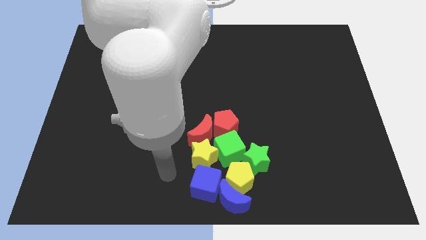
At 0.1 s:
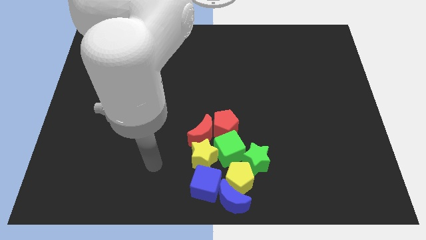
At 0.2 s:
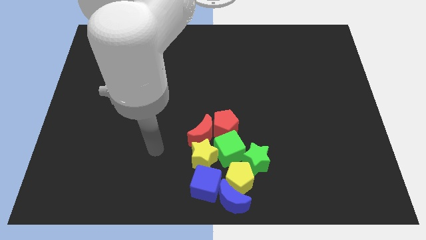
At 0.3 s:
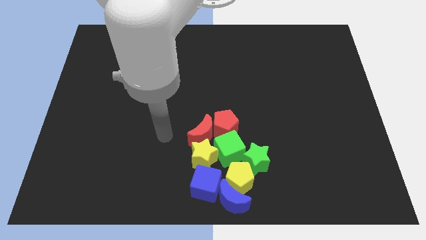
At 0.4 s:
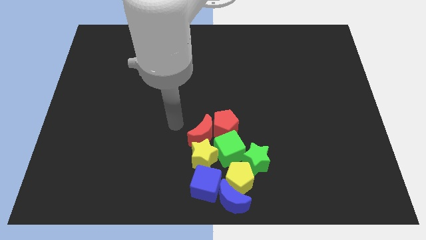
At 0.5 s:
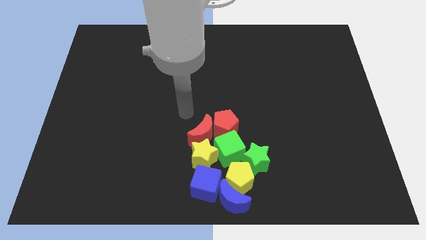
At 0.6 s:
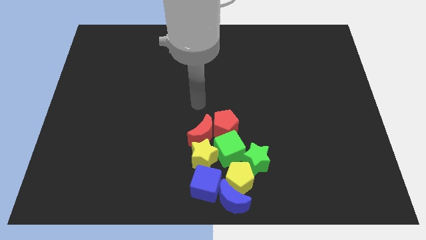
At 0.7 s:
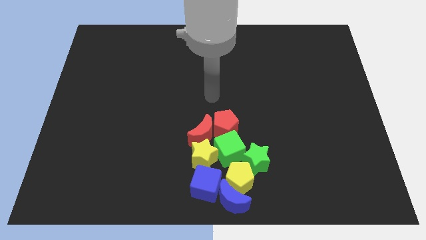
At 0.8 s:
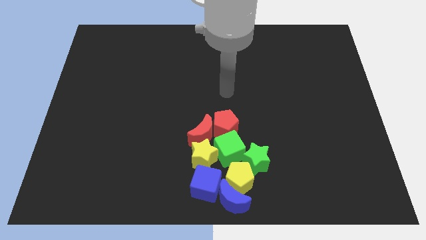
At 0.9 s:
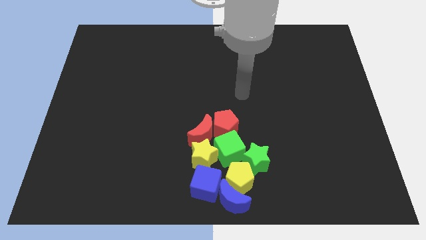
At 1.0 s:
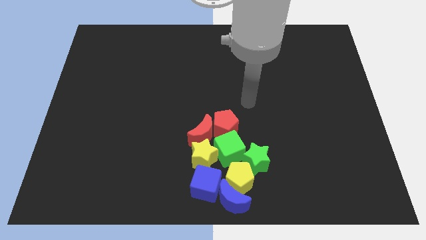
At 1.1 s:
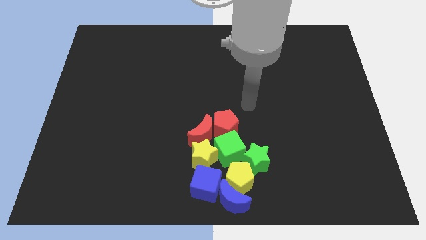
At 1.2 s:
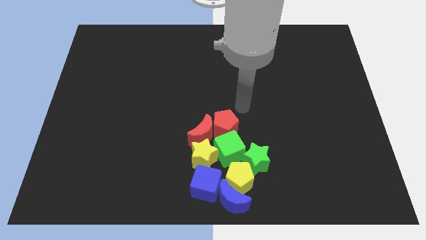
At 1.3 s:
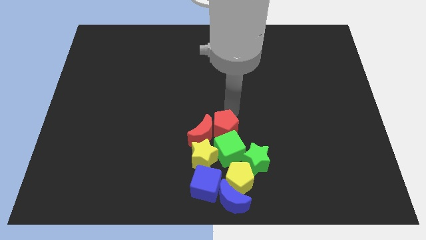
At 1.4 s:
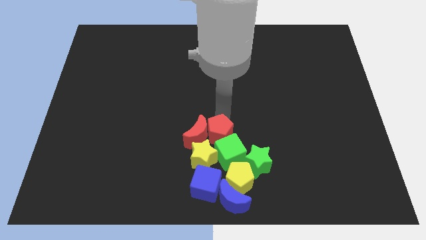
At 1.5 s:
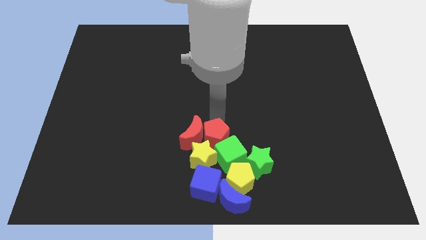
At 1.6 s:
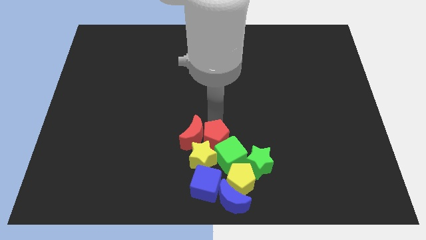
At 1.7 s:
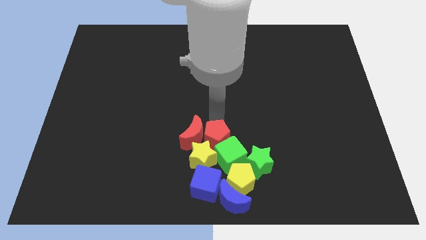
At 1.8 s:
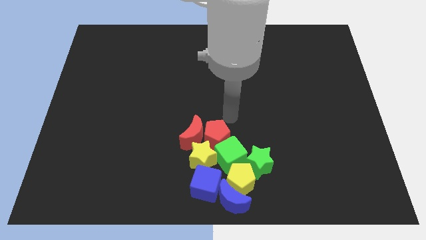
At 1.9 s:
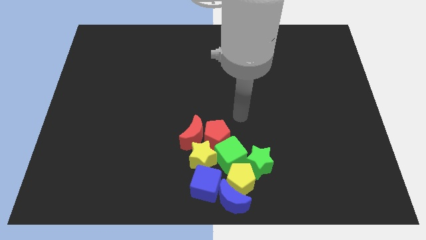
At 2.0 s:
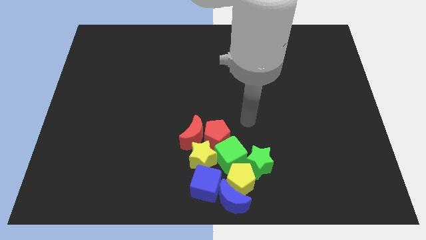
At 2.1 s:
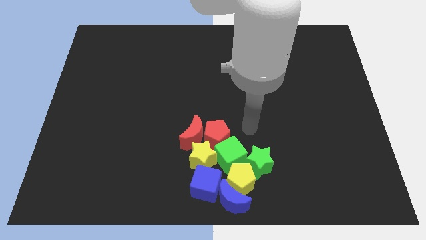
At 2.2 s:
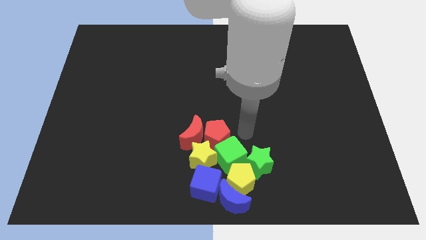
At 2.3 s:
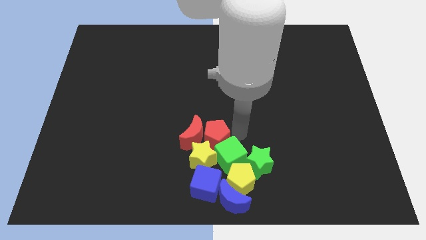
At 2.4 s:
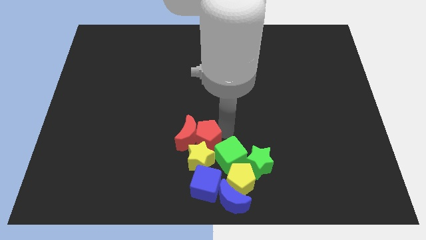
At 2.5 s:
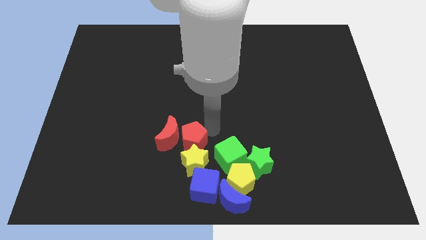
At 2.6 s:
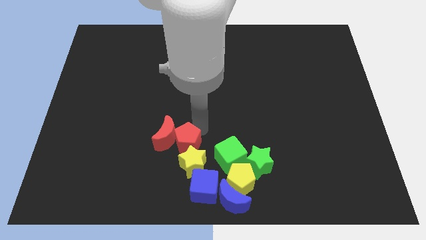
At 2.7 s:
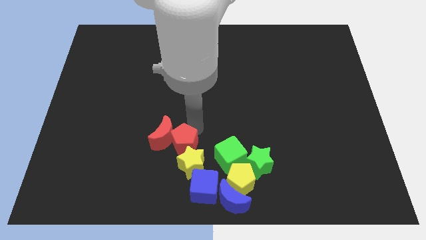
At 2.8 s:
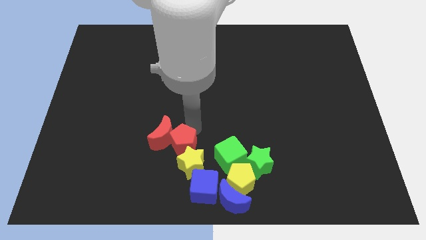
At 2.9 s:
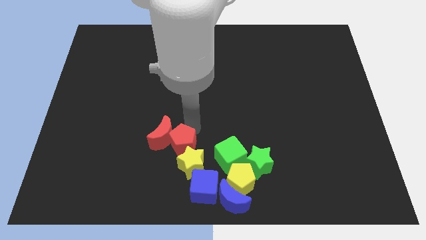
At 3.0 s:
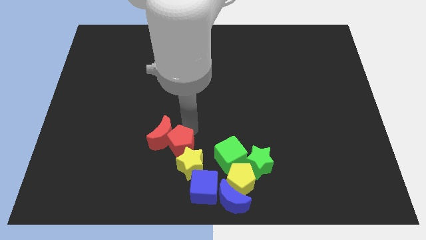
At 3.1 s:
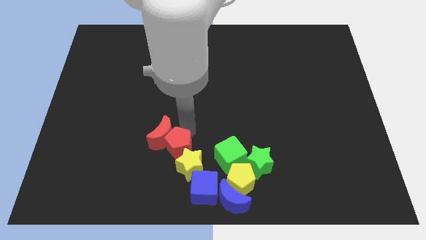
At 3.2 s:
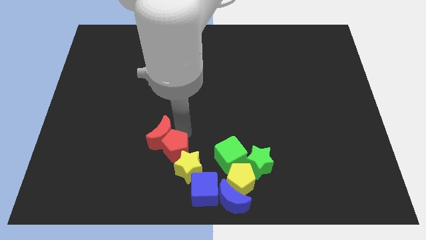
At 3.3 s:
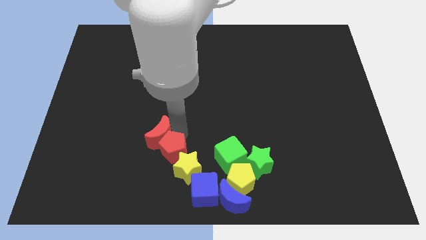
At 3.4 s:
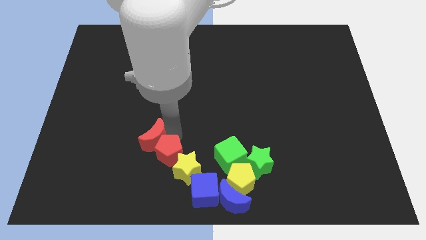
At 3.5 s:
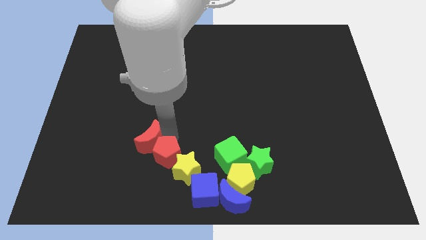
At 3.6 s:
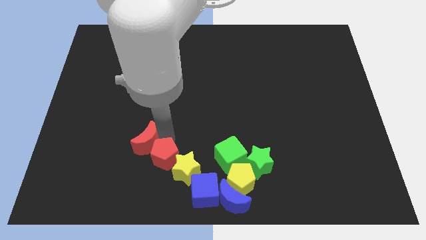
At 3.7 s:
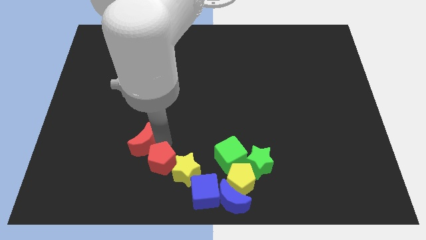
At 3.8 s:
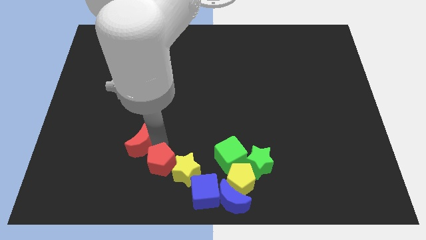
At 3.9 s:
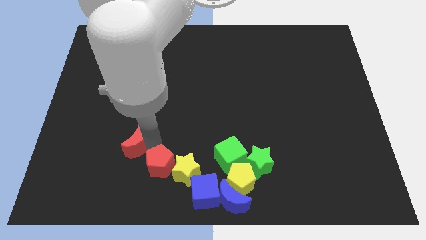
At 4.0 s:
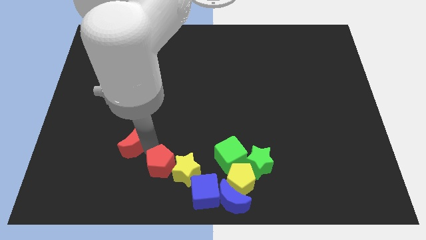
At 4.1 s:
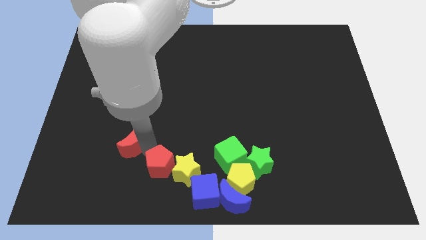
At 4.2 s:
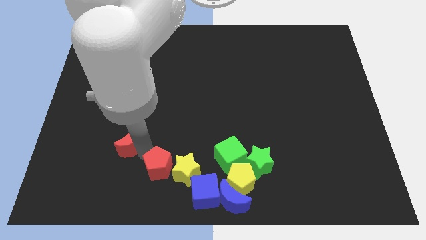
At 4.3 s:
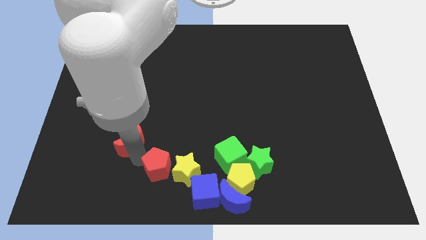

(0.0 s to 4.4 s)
slightly move the red blocks to left

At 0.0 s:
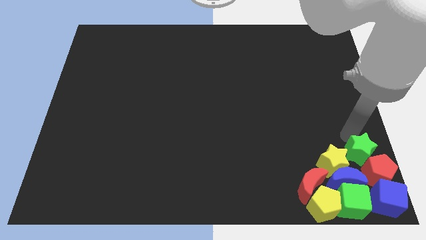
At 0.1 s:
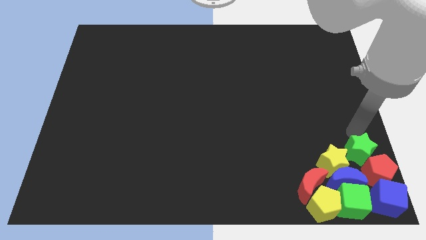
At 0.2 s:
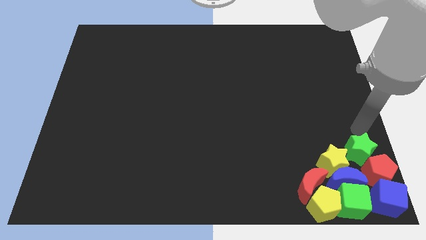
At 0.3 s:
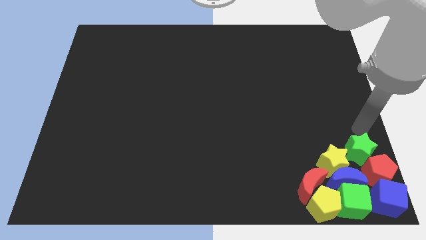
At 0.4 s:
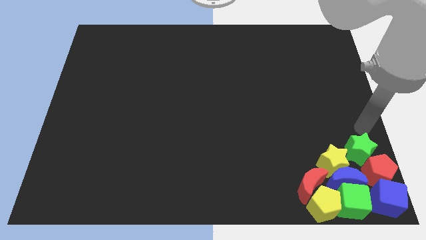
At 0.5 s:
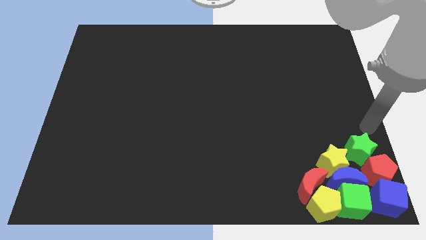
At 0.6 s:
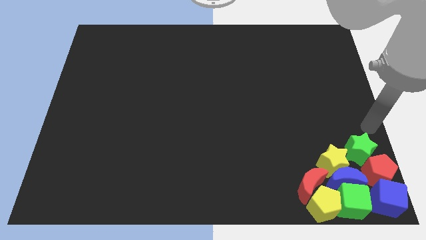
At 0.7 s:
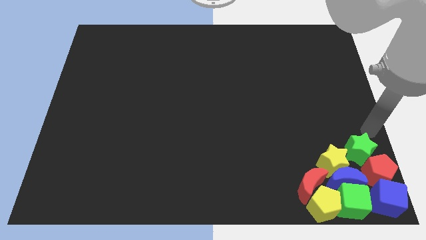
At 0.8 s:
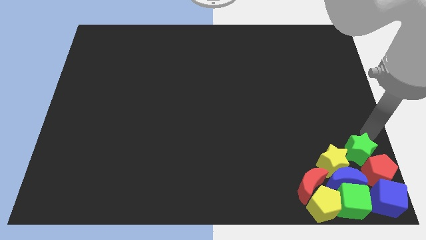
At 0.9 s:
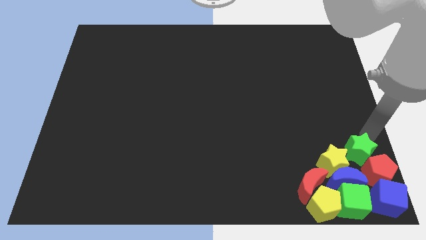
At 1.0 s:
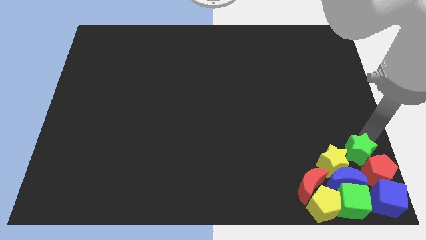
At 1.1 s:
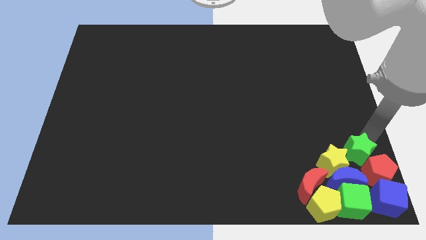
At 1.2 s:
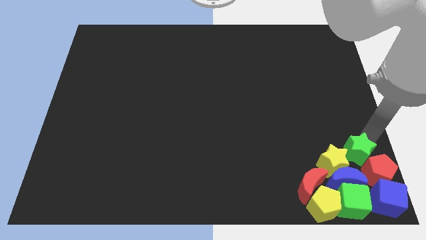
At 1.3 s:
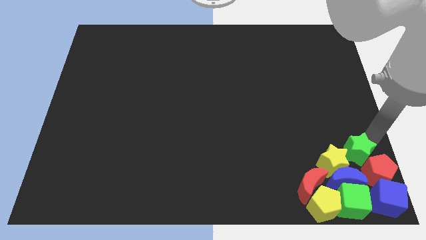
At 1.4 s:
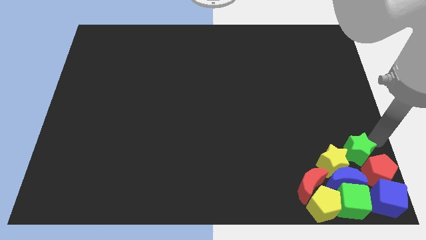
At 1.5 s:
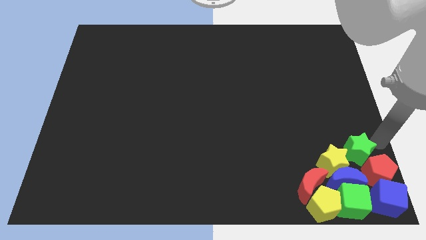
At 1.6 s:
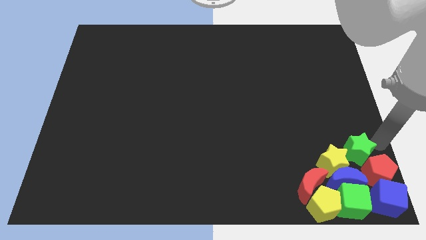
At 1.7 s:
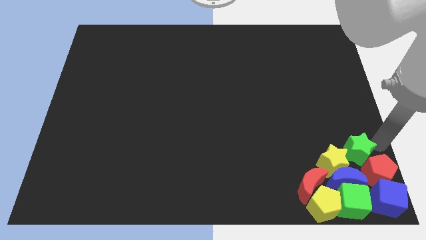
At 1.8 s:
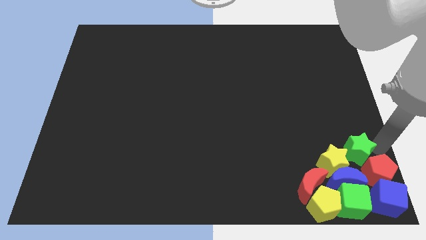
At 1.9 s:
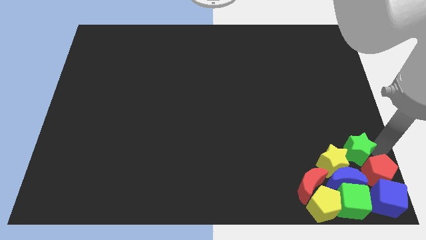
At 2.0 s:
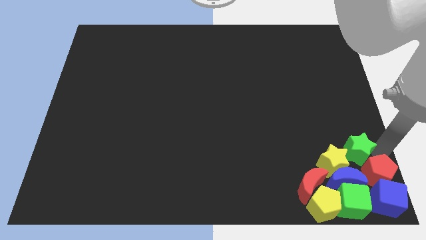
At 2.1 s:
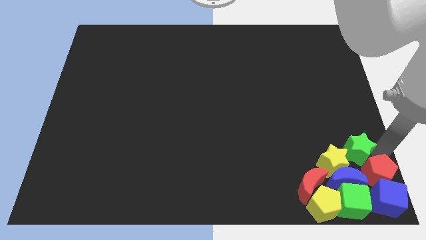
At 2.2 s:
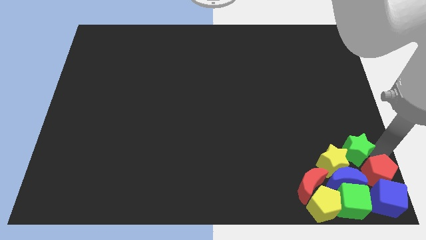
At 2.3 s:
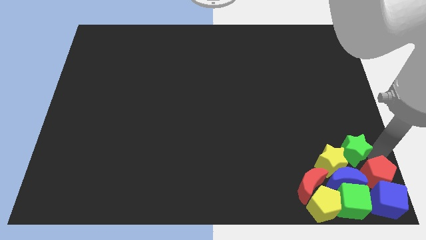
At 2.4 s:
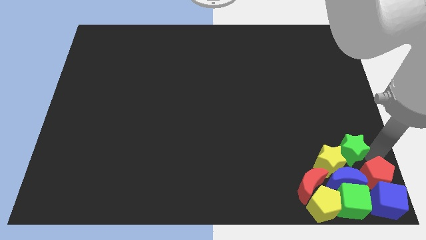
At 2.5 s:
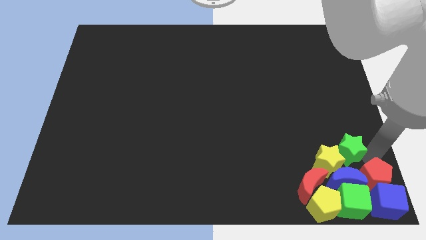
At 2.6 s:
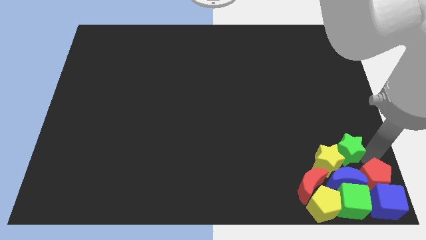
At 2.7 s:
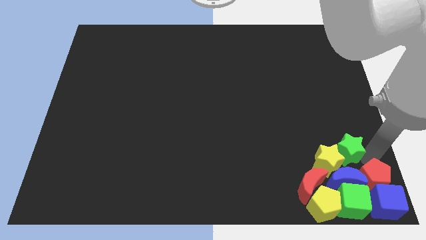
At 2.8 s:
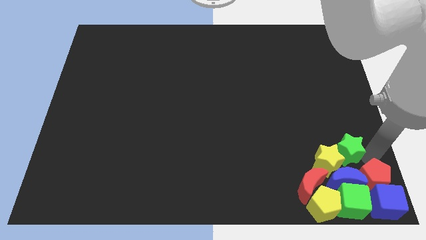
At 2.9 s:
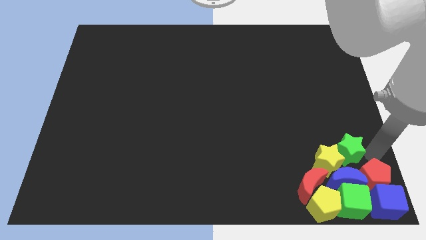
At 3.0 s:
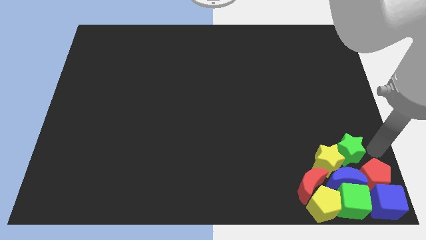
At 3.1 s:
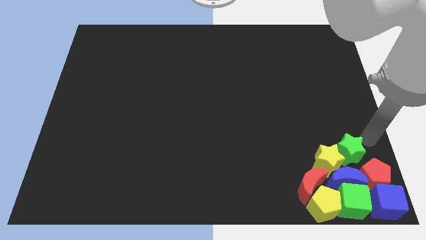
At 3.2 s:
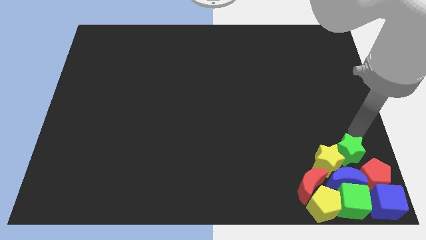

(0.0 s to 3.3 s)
adjust the group of blocks at the bottom right corner of the board

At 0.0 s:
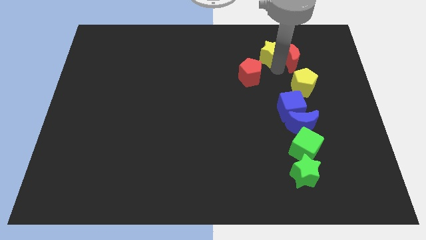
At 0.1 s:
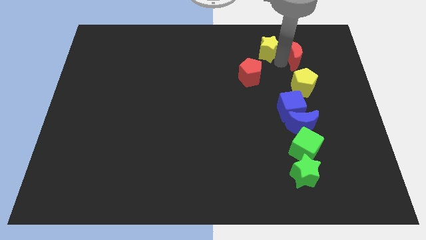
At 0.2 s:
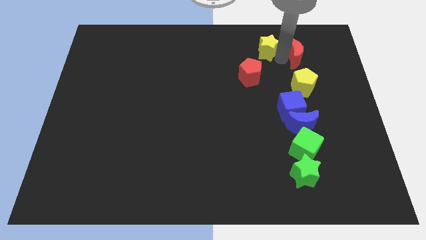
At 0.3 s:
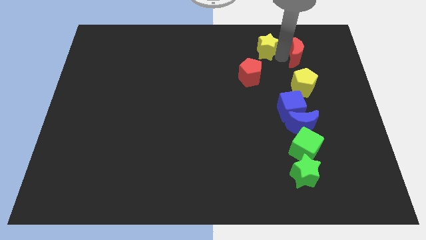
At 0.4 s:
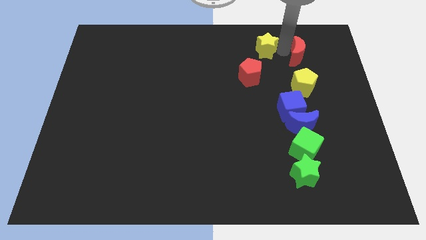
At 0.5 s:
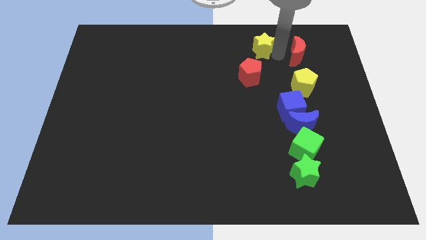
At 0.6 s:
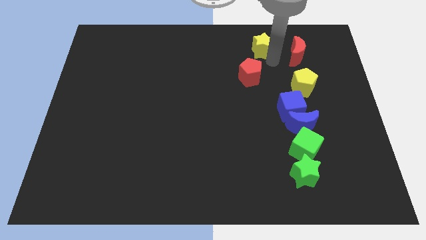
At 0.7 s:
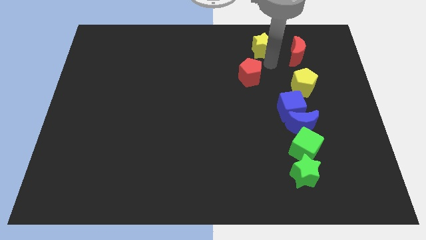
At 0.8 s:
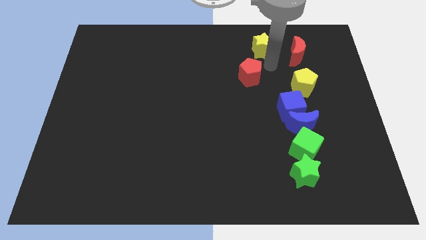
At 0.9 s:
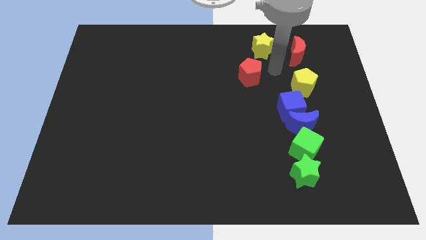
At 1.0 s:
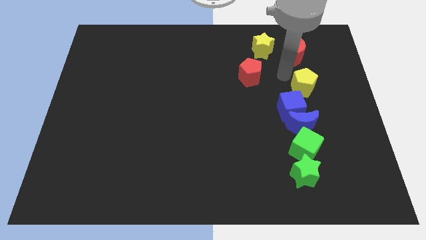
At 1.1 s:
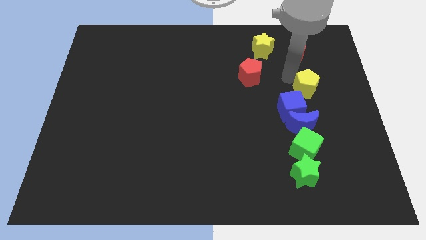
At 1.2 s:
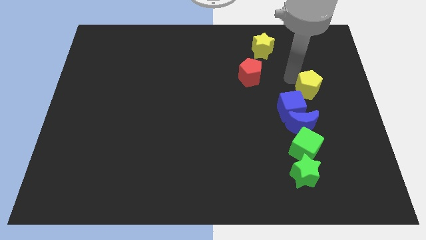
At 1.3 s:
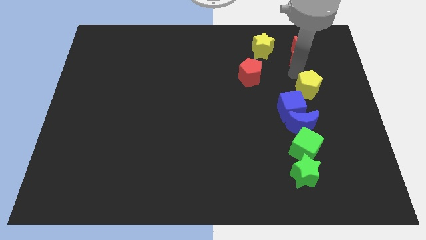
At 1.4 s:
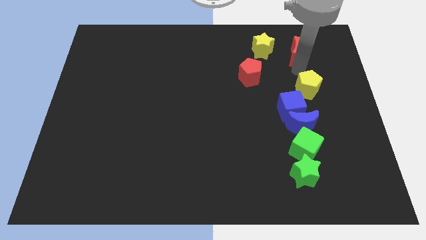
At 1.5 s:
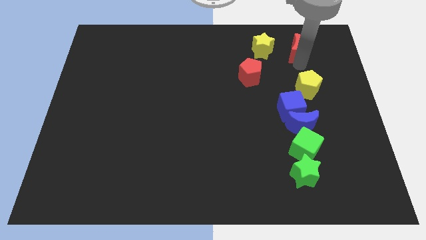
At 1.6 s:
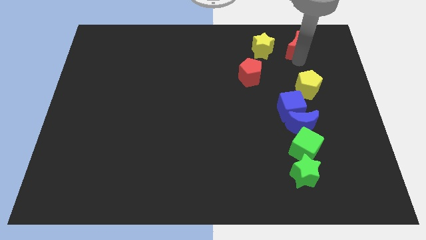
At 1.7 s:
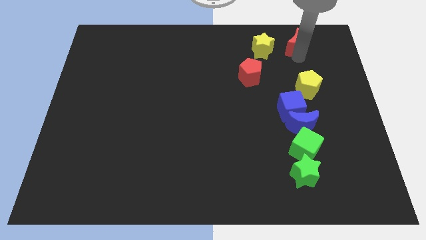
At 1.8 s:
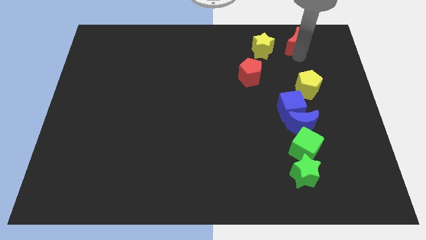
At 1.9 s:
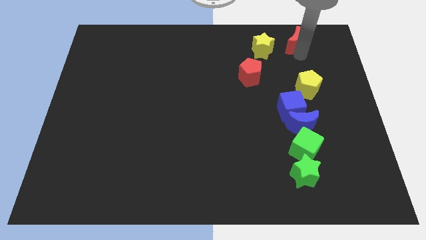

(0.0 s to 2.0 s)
separate yellow star and red moon
